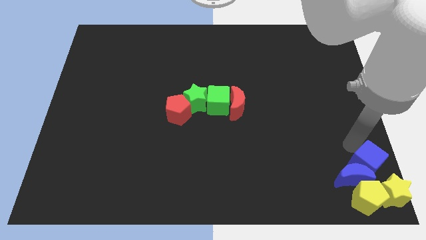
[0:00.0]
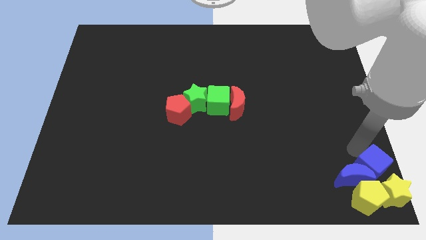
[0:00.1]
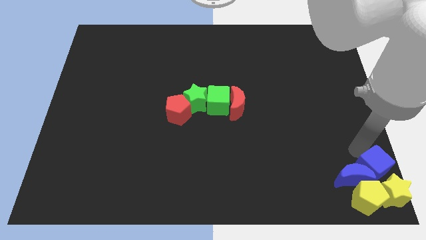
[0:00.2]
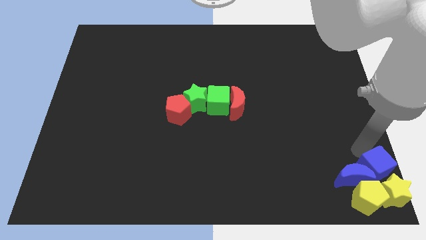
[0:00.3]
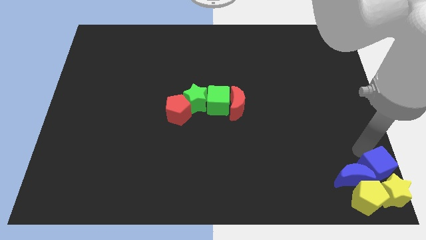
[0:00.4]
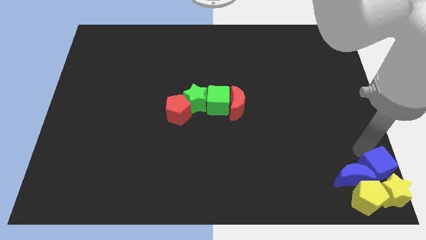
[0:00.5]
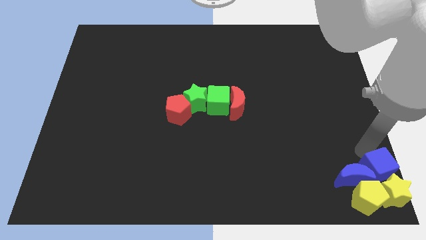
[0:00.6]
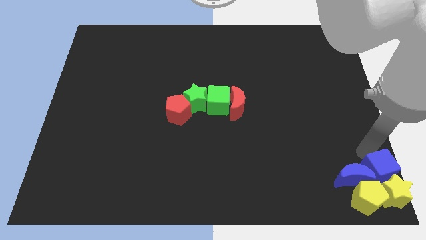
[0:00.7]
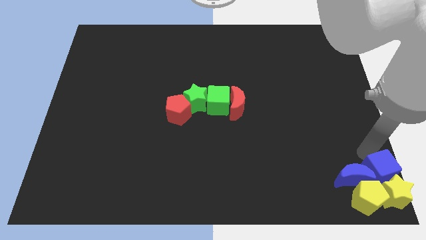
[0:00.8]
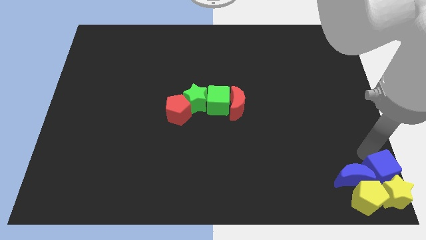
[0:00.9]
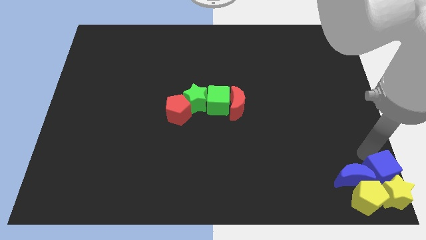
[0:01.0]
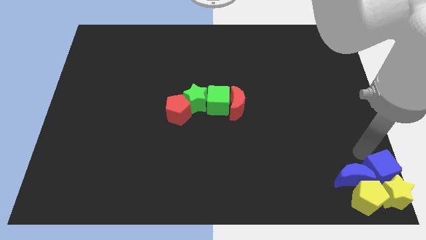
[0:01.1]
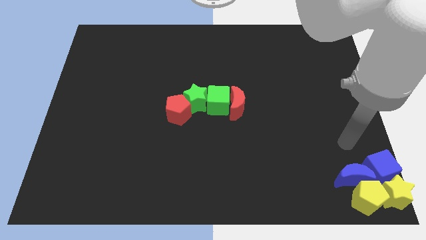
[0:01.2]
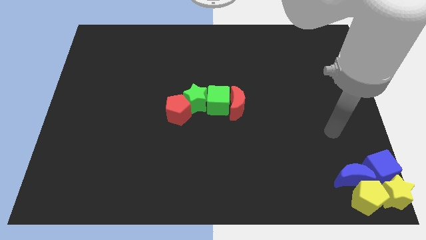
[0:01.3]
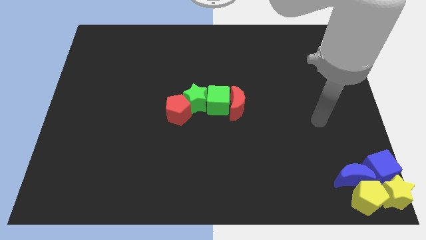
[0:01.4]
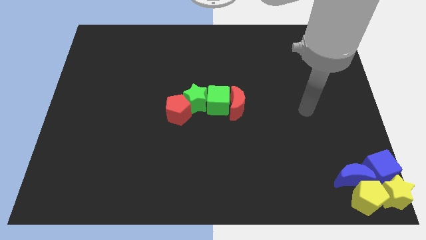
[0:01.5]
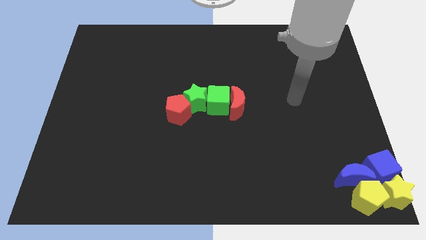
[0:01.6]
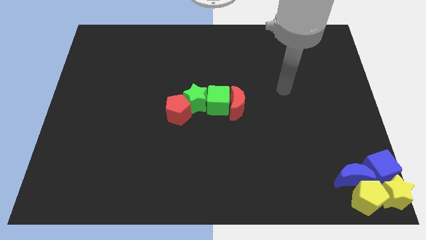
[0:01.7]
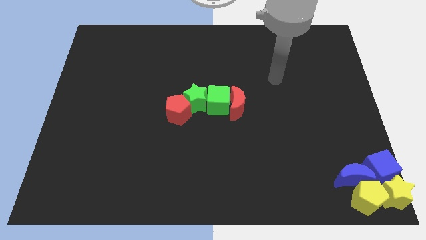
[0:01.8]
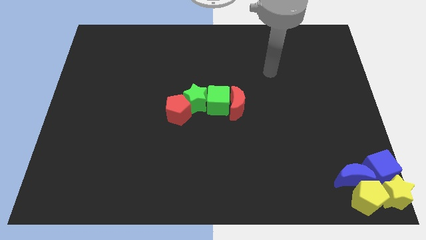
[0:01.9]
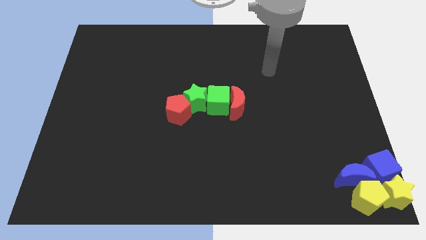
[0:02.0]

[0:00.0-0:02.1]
slightly move the blue cube to the top of the yellow star

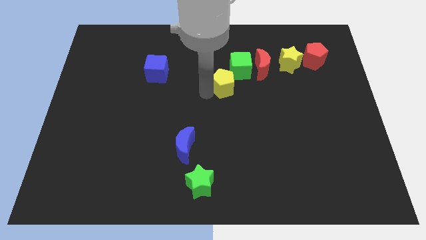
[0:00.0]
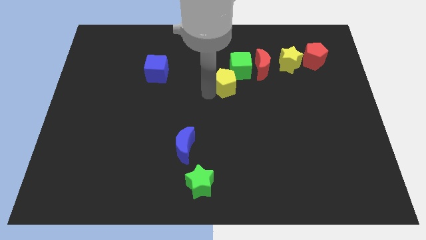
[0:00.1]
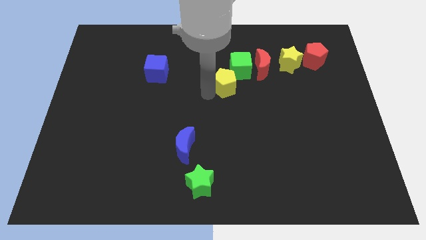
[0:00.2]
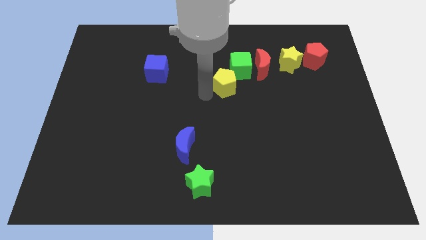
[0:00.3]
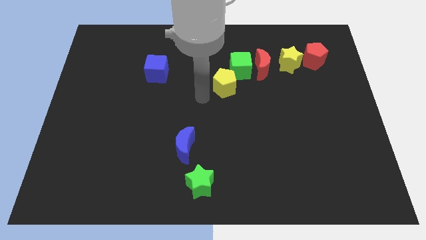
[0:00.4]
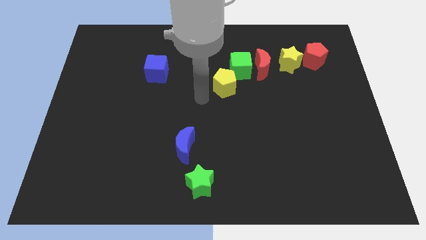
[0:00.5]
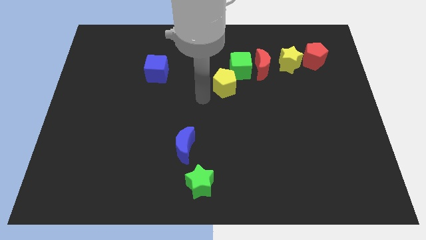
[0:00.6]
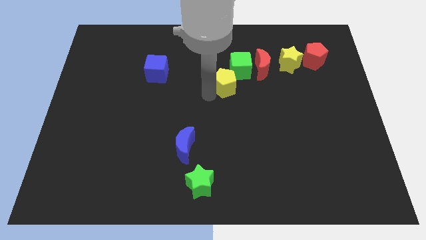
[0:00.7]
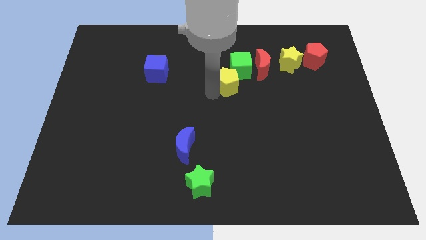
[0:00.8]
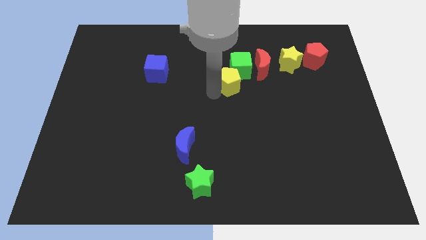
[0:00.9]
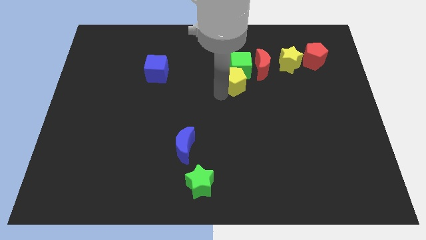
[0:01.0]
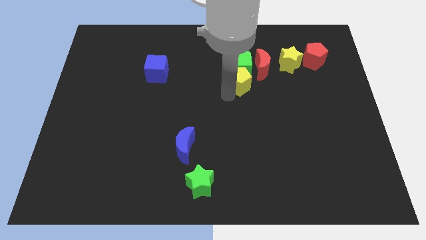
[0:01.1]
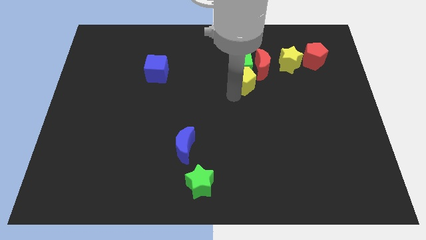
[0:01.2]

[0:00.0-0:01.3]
put the yellow pentagon underneath the green cube

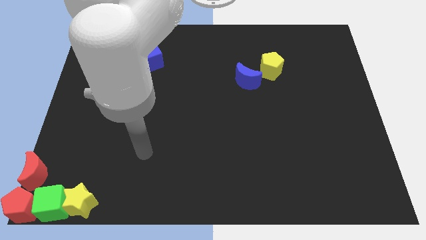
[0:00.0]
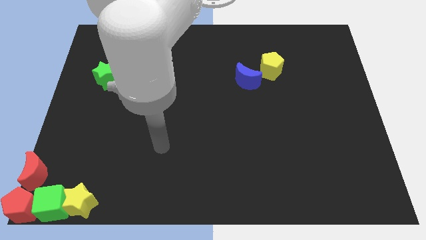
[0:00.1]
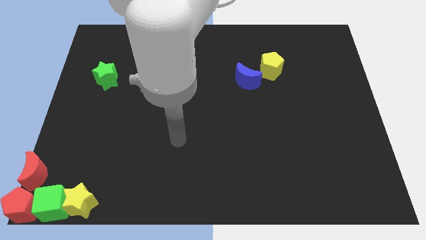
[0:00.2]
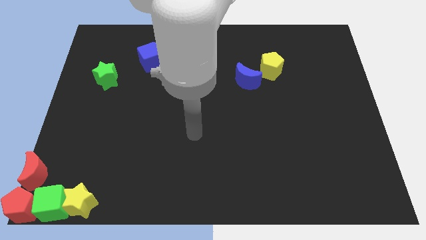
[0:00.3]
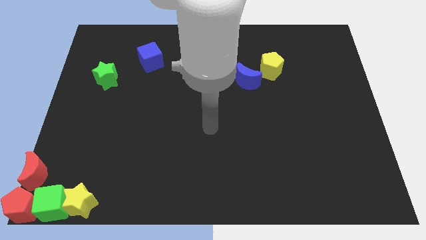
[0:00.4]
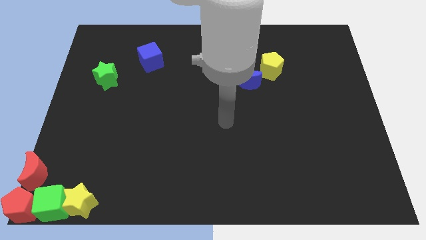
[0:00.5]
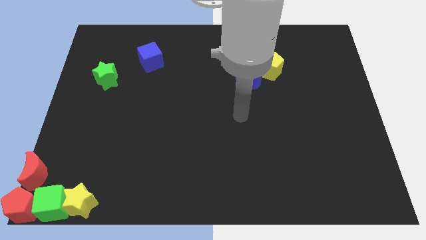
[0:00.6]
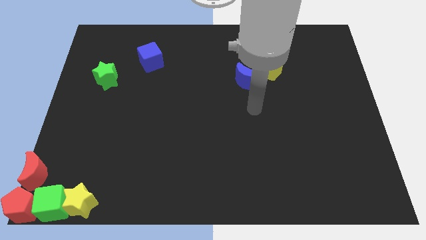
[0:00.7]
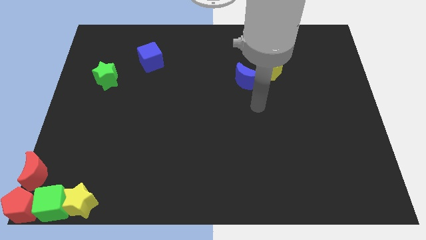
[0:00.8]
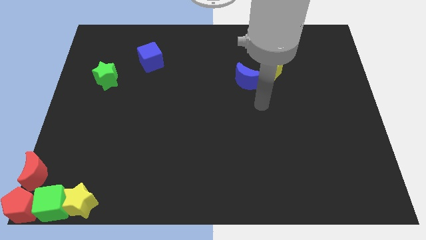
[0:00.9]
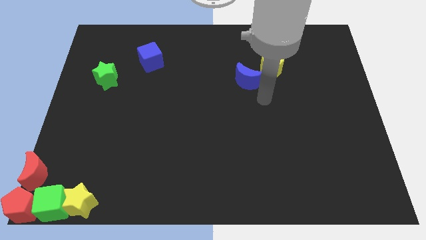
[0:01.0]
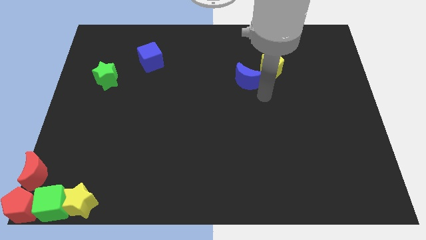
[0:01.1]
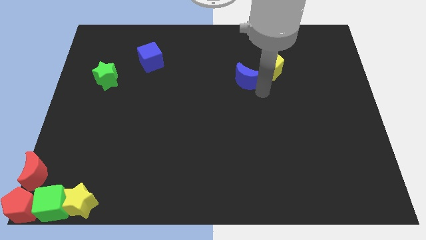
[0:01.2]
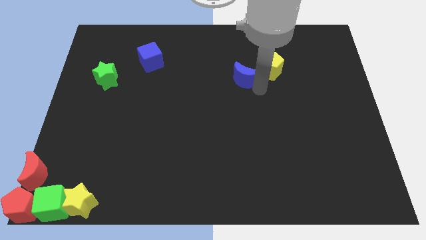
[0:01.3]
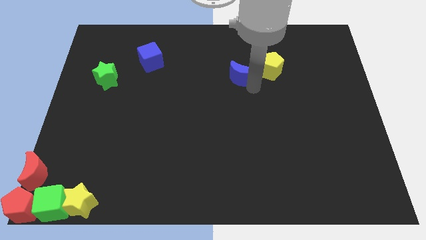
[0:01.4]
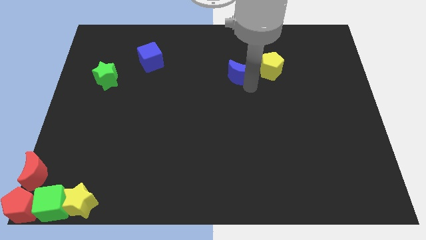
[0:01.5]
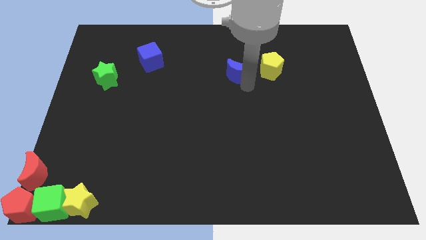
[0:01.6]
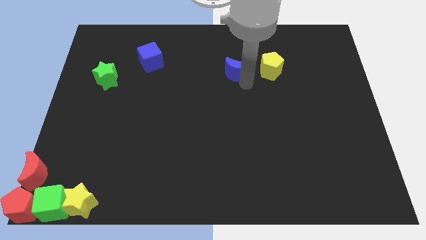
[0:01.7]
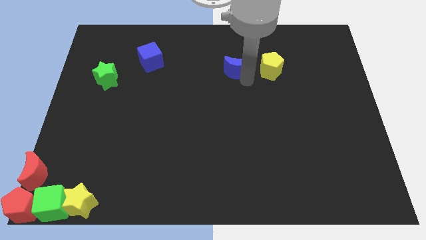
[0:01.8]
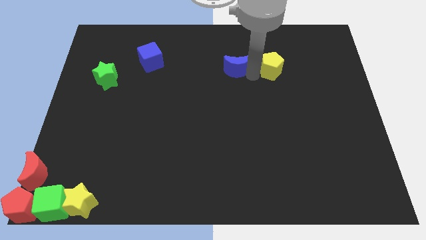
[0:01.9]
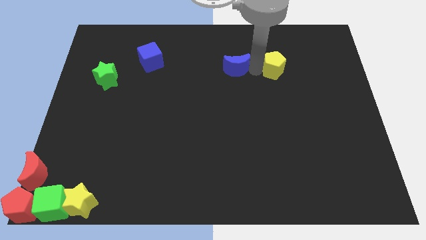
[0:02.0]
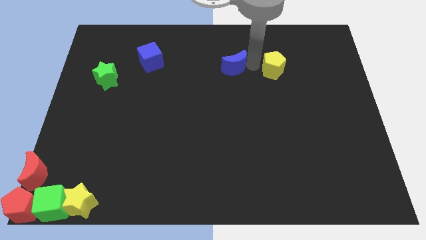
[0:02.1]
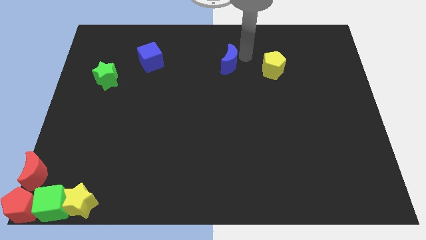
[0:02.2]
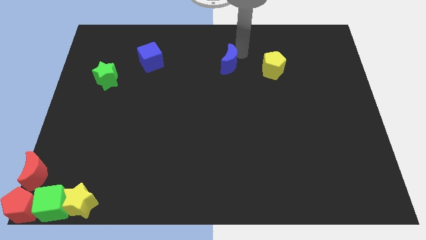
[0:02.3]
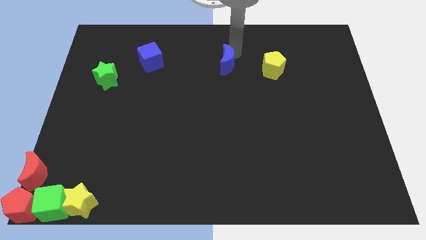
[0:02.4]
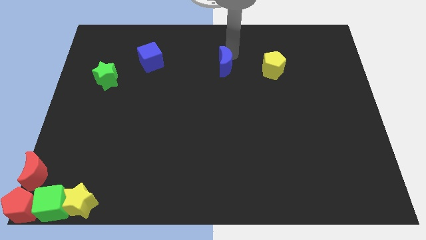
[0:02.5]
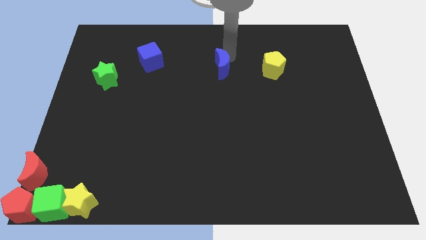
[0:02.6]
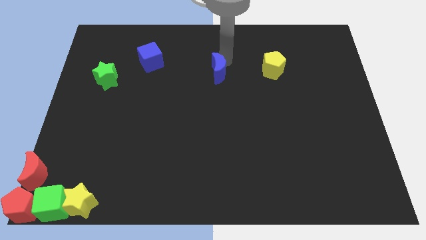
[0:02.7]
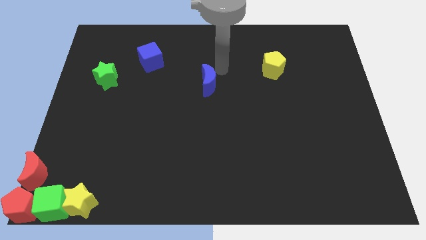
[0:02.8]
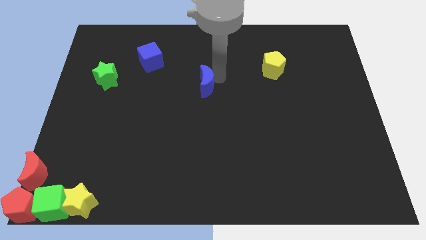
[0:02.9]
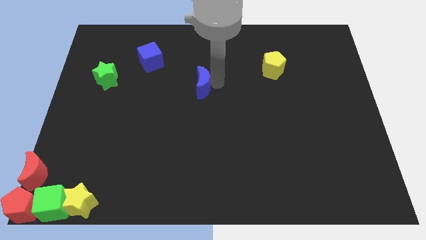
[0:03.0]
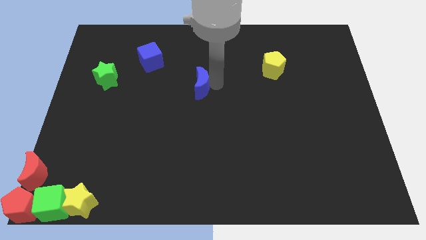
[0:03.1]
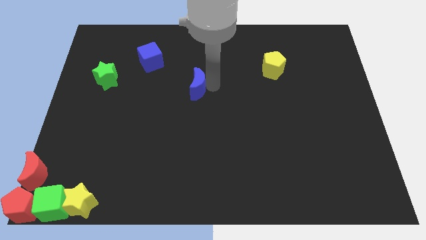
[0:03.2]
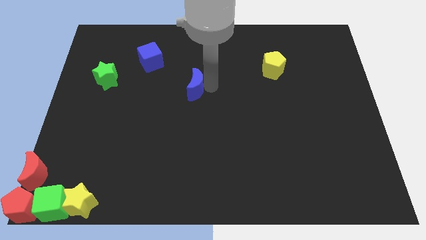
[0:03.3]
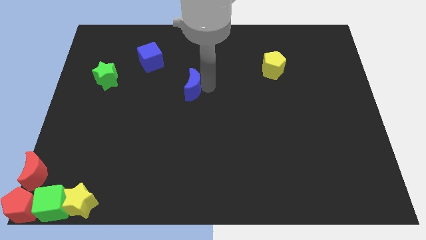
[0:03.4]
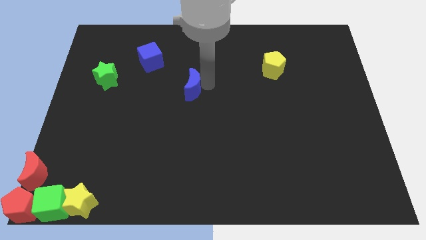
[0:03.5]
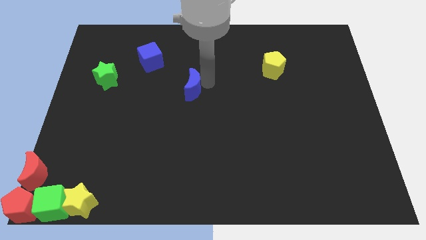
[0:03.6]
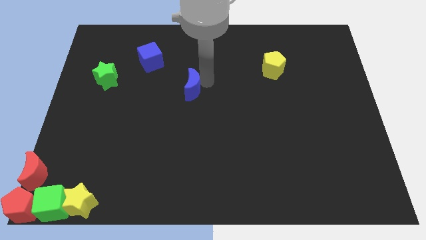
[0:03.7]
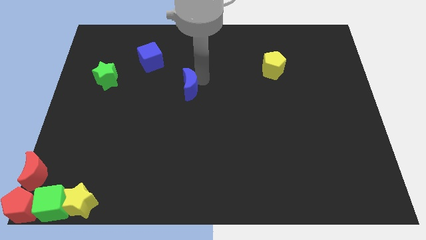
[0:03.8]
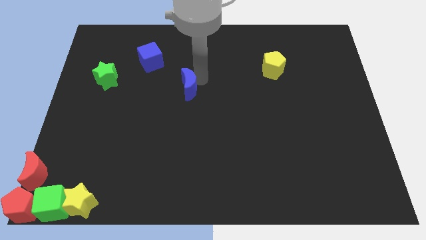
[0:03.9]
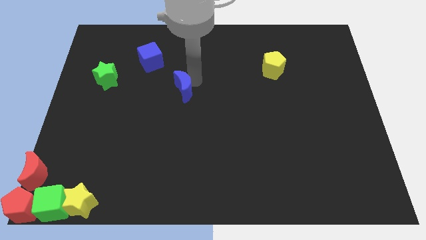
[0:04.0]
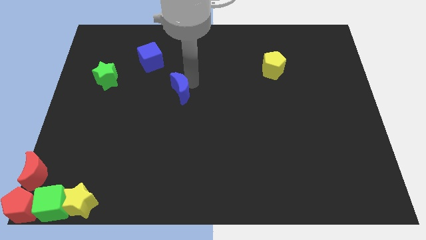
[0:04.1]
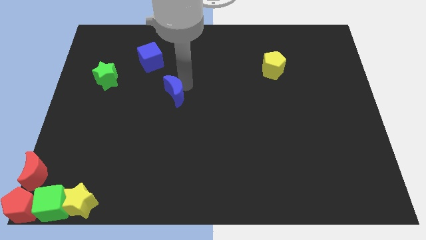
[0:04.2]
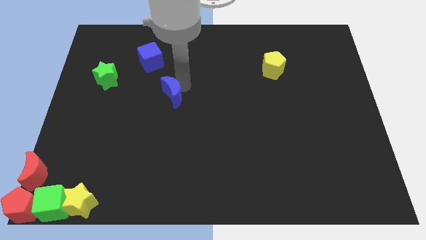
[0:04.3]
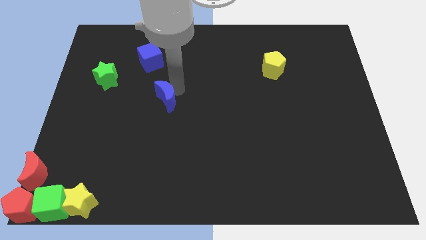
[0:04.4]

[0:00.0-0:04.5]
separate blue moon from the yellow pentagon

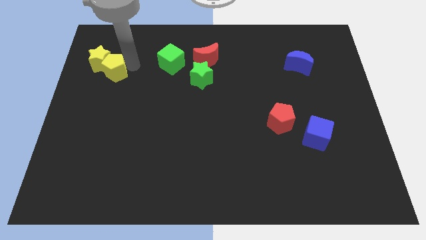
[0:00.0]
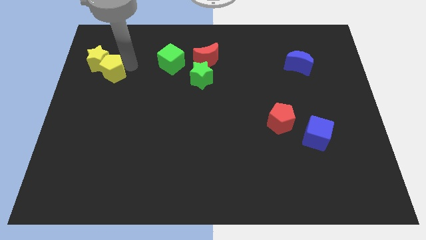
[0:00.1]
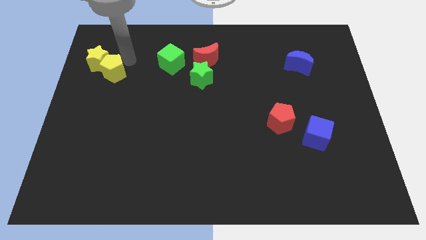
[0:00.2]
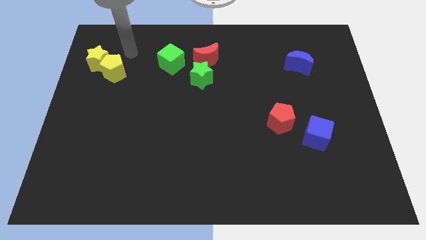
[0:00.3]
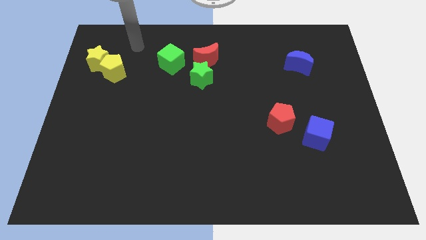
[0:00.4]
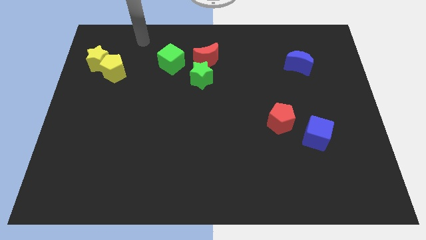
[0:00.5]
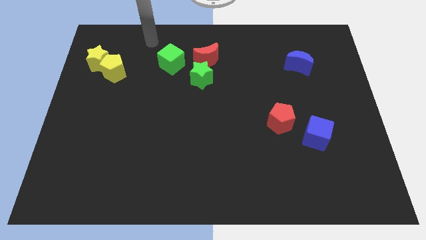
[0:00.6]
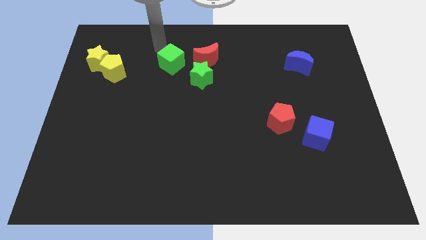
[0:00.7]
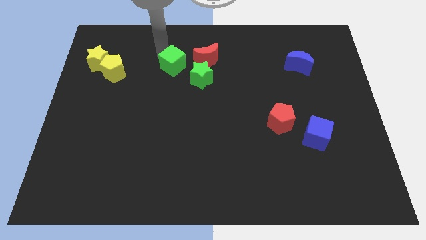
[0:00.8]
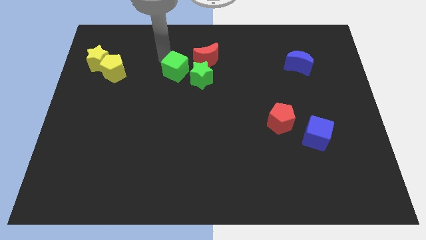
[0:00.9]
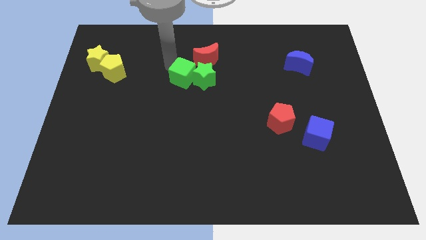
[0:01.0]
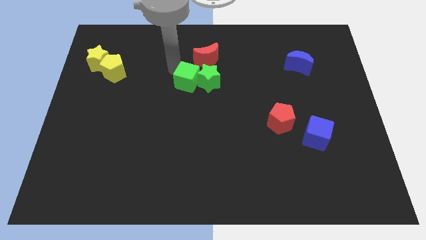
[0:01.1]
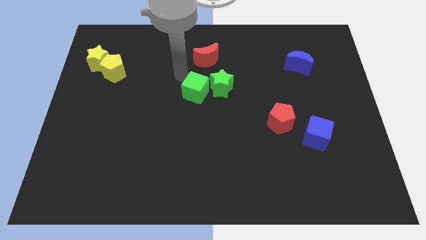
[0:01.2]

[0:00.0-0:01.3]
place the green cube close to the green star
